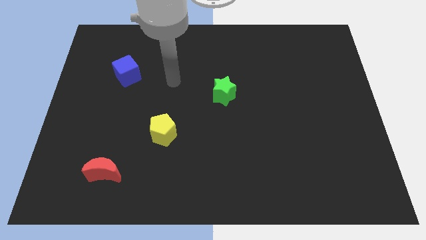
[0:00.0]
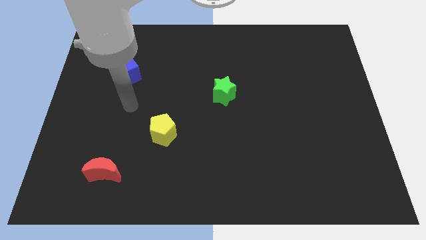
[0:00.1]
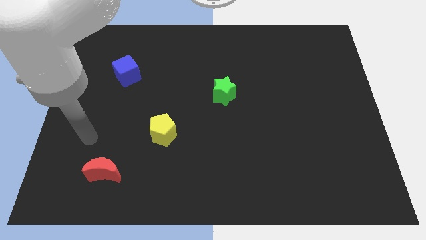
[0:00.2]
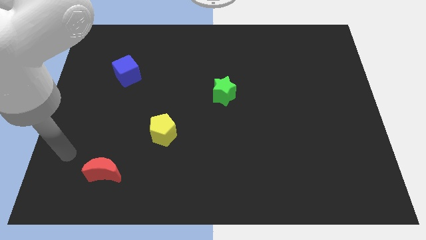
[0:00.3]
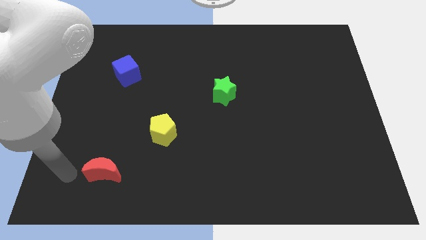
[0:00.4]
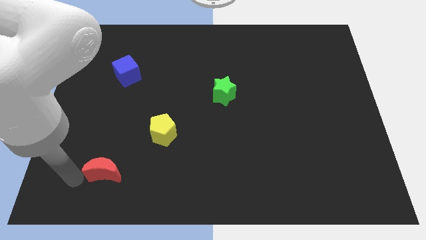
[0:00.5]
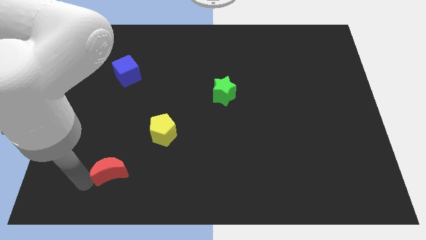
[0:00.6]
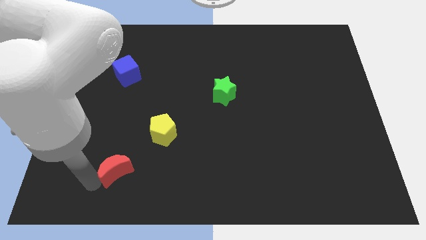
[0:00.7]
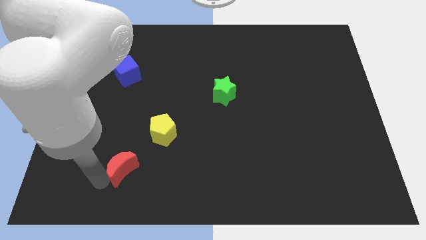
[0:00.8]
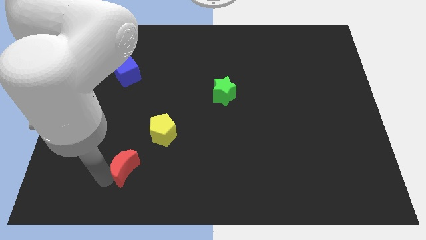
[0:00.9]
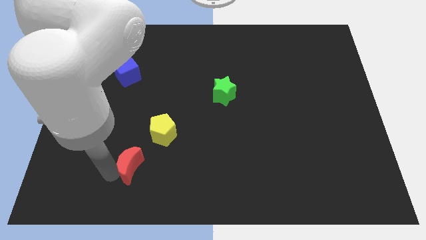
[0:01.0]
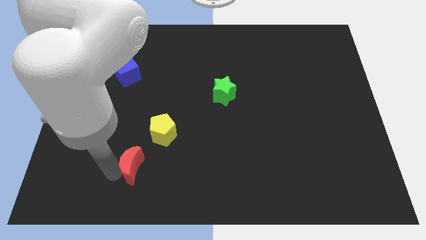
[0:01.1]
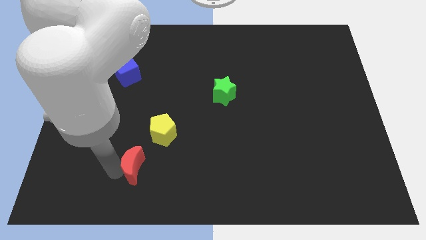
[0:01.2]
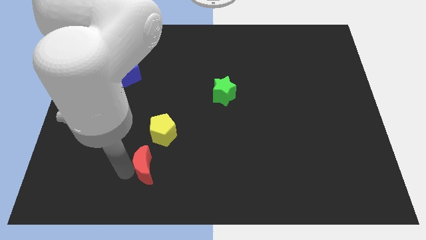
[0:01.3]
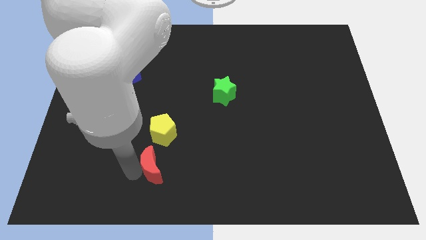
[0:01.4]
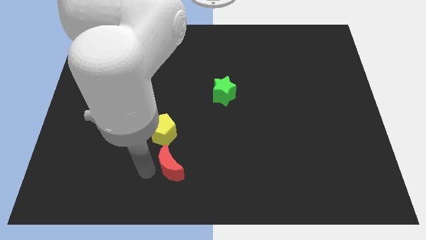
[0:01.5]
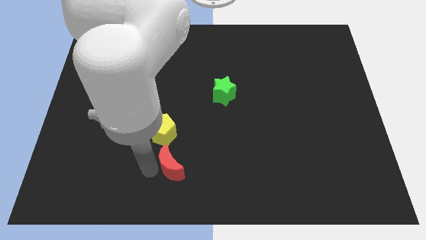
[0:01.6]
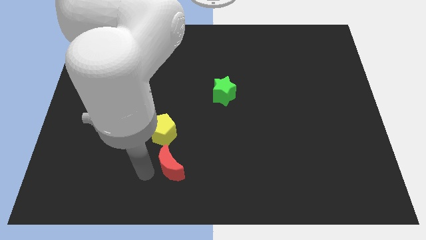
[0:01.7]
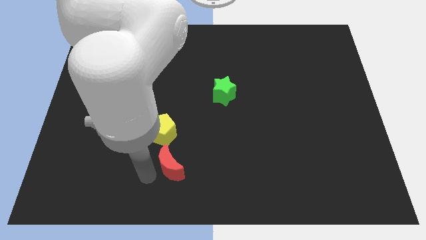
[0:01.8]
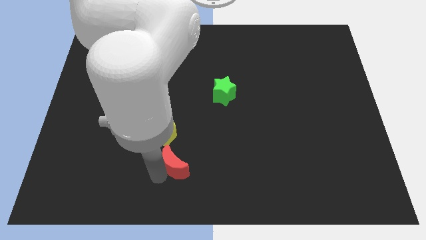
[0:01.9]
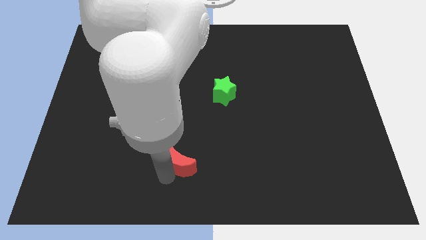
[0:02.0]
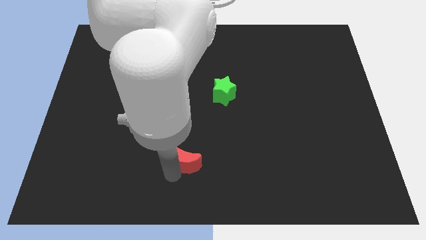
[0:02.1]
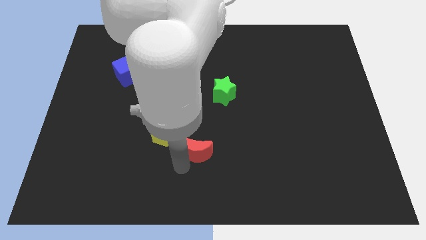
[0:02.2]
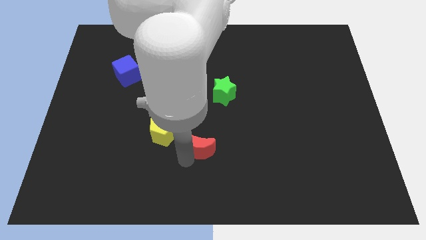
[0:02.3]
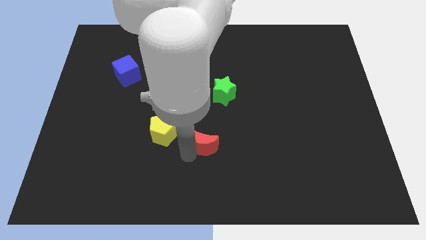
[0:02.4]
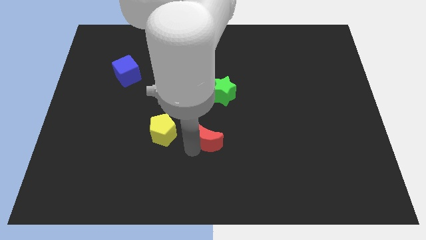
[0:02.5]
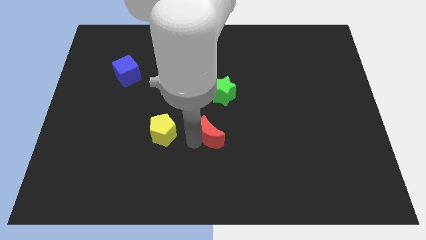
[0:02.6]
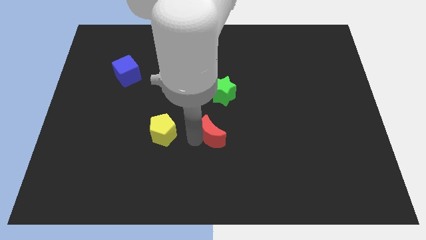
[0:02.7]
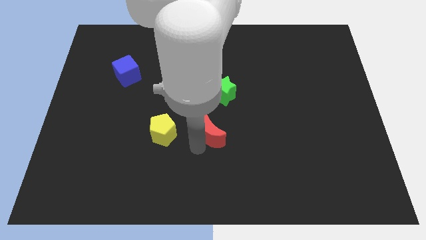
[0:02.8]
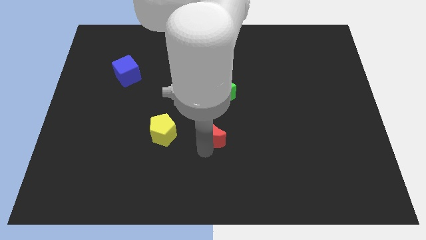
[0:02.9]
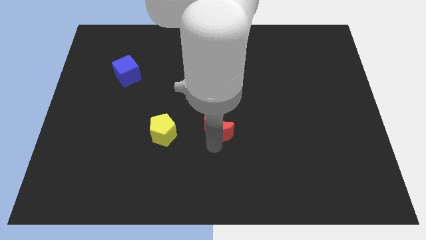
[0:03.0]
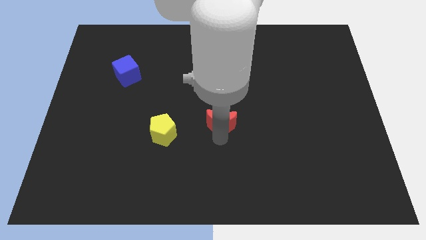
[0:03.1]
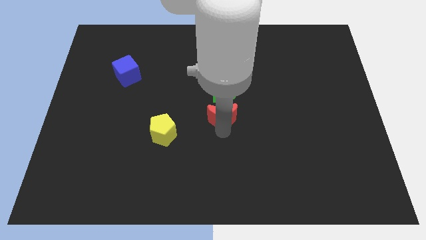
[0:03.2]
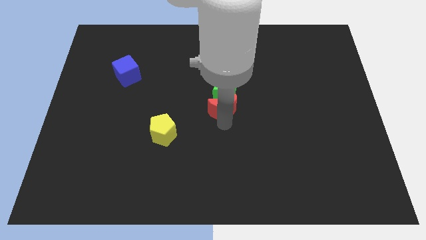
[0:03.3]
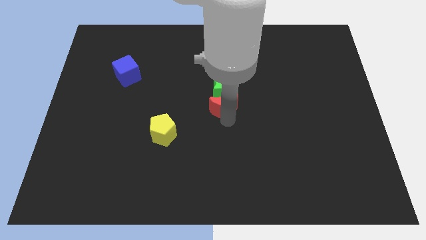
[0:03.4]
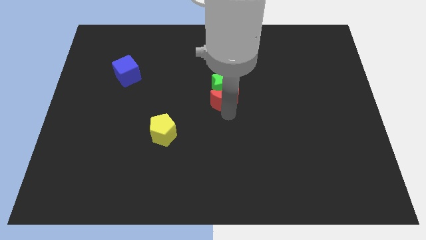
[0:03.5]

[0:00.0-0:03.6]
put the red moon next to the star

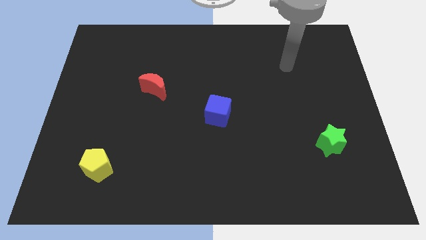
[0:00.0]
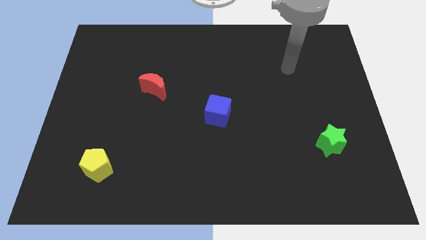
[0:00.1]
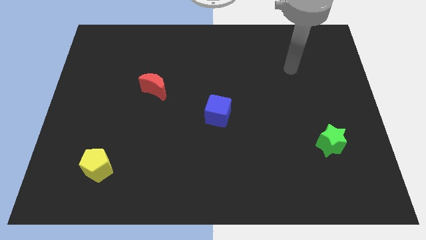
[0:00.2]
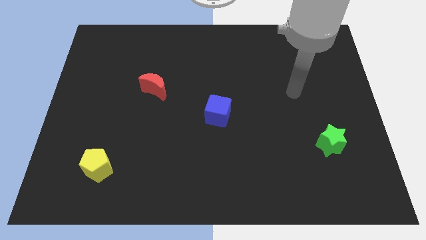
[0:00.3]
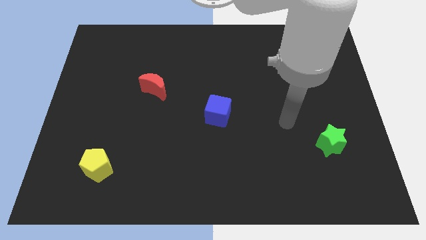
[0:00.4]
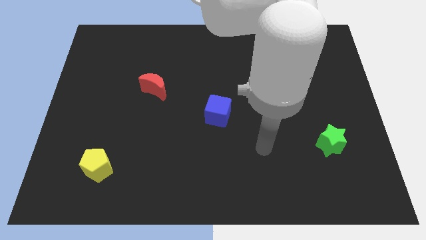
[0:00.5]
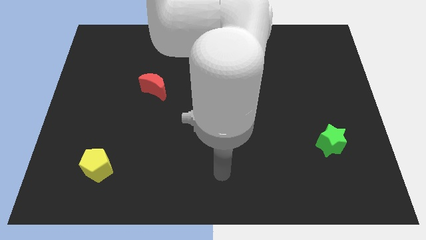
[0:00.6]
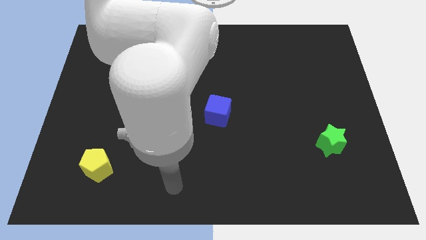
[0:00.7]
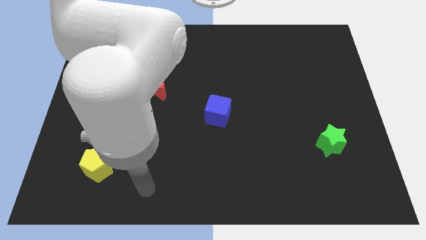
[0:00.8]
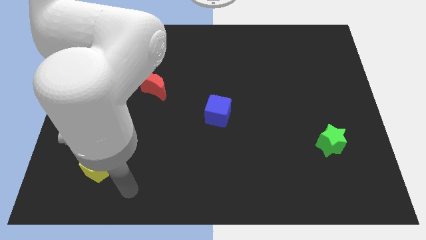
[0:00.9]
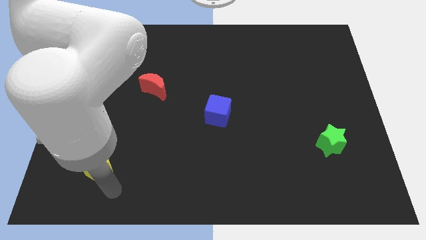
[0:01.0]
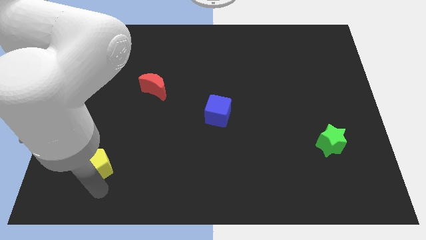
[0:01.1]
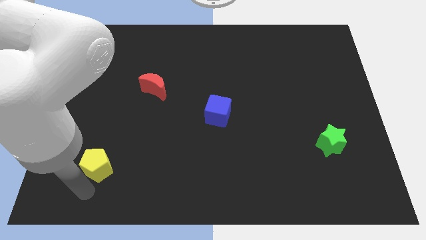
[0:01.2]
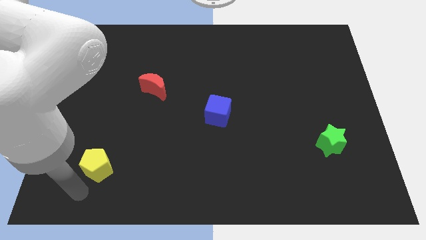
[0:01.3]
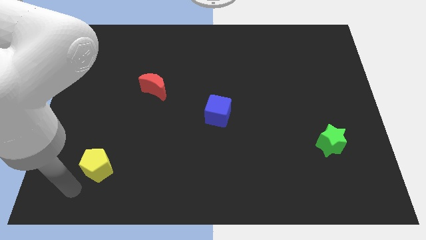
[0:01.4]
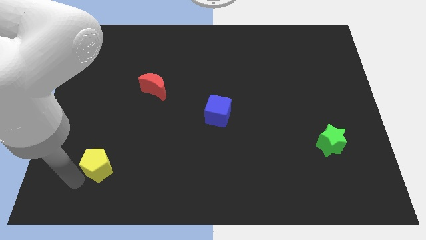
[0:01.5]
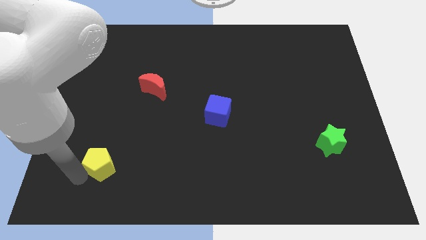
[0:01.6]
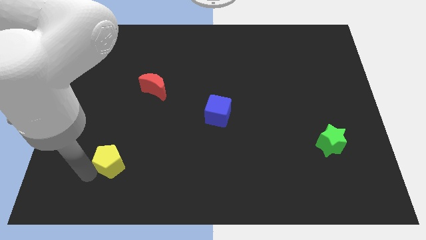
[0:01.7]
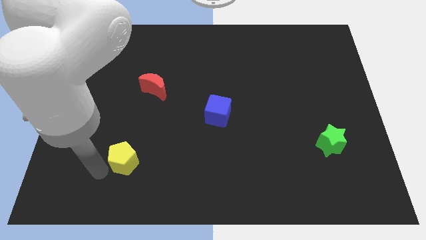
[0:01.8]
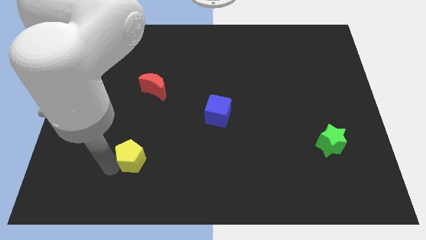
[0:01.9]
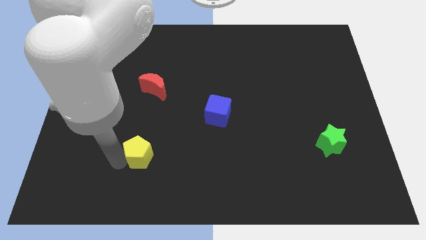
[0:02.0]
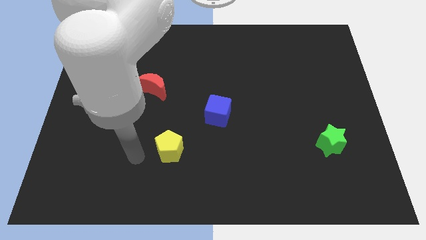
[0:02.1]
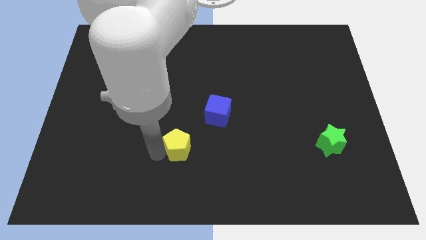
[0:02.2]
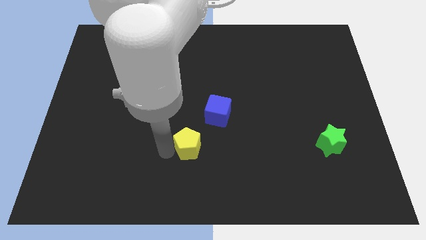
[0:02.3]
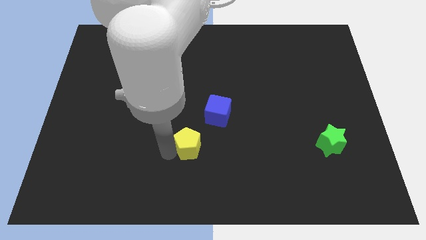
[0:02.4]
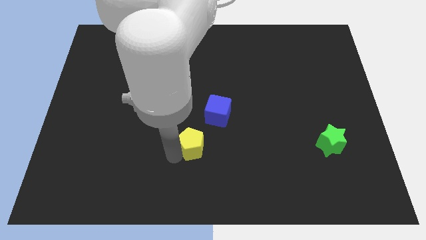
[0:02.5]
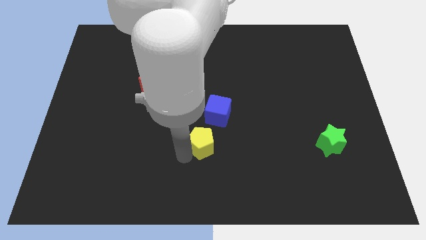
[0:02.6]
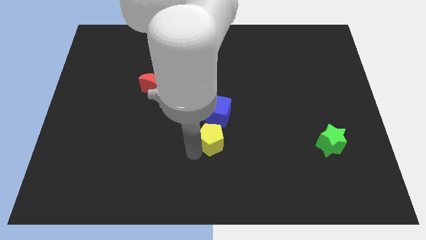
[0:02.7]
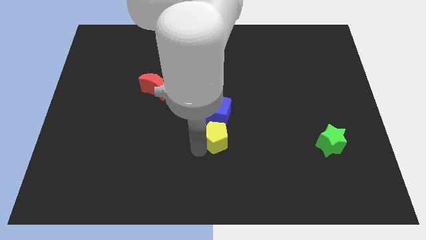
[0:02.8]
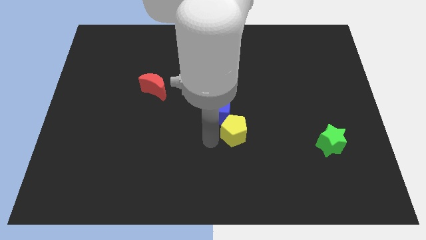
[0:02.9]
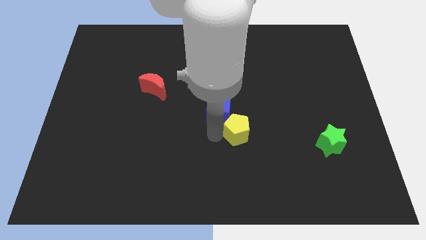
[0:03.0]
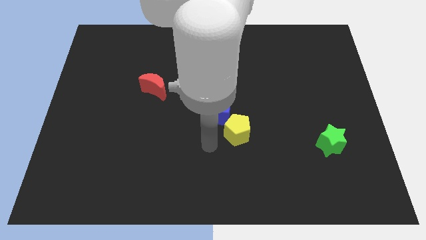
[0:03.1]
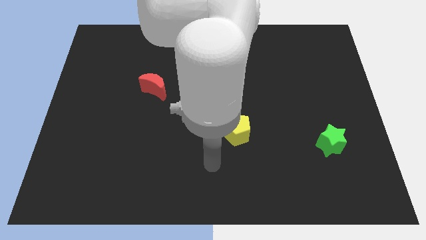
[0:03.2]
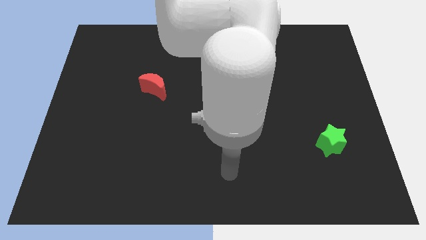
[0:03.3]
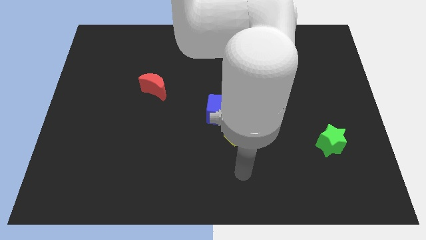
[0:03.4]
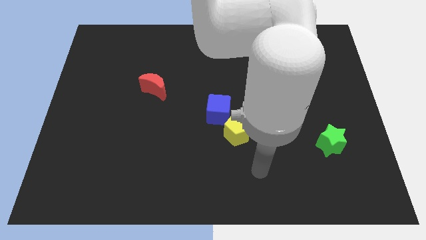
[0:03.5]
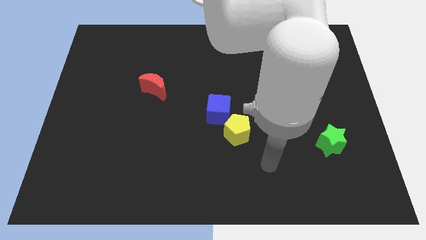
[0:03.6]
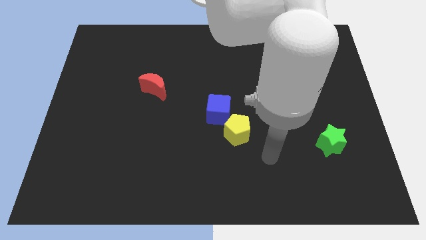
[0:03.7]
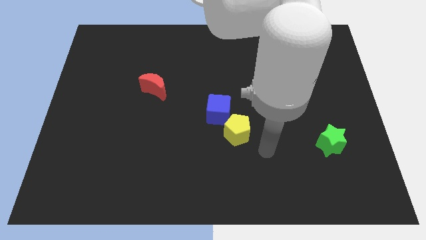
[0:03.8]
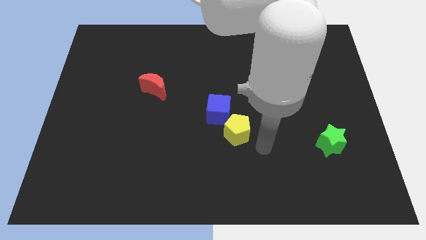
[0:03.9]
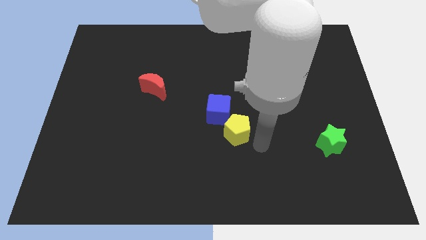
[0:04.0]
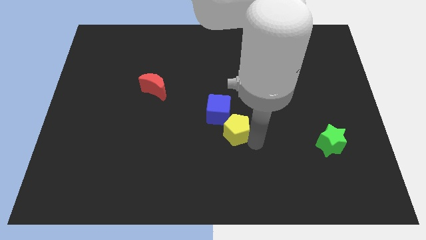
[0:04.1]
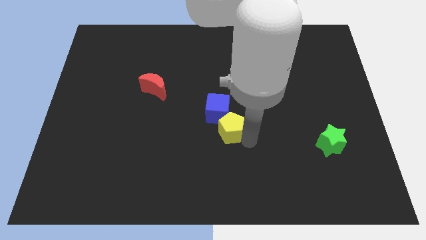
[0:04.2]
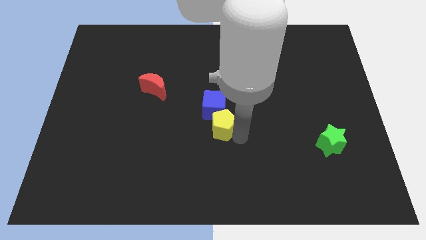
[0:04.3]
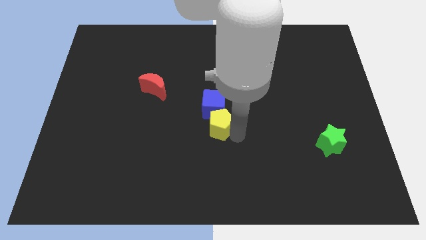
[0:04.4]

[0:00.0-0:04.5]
slide the yellow block next to the blue cube

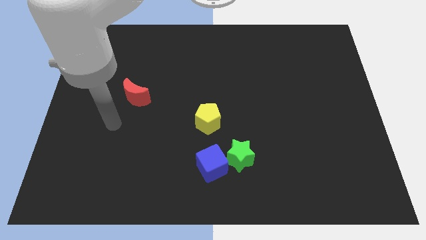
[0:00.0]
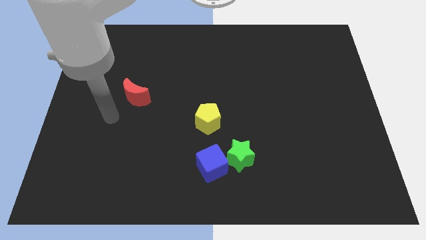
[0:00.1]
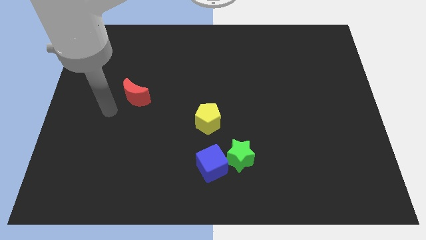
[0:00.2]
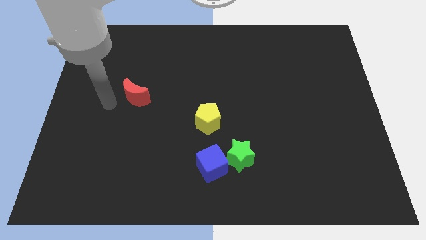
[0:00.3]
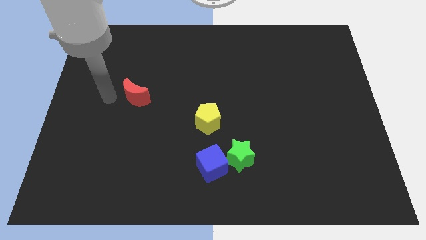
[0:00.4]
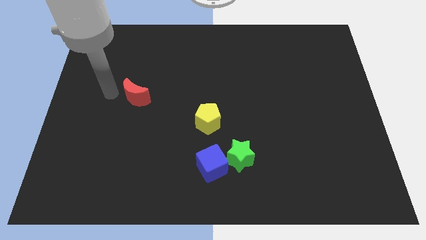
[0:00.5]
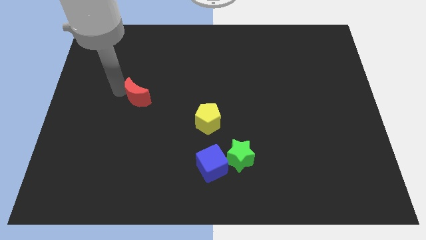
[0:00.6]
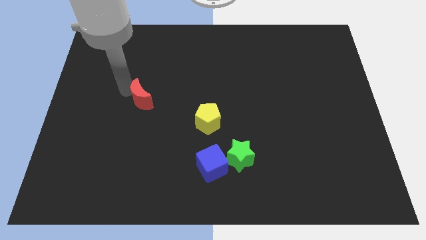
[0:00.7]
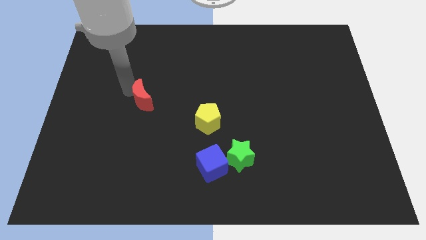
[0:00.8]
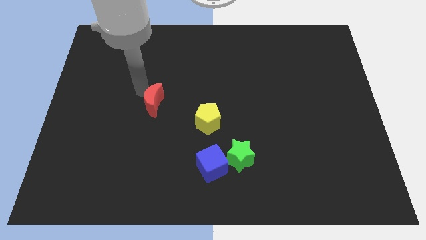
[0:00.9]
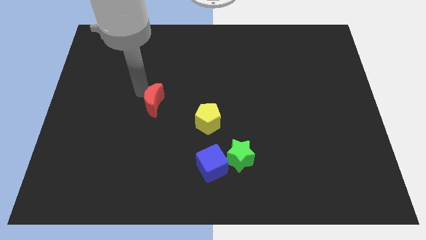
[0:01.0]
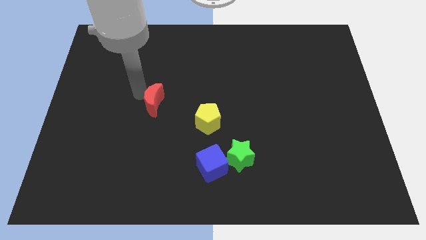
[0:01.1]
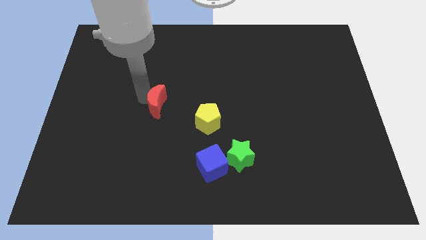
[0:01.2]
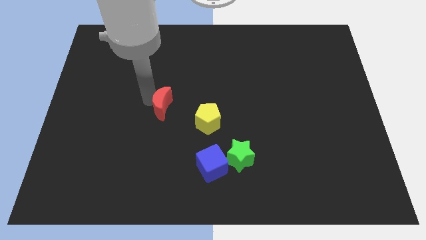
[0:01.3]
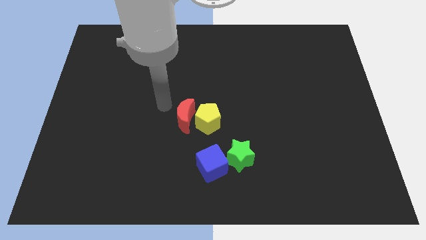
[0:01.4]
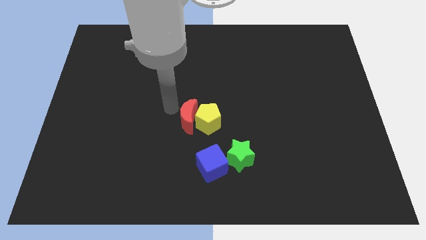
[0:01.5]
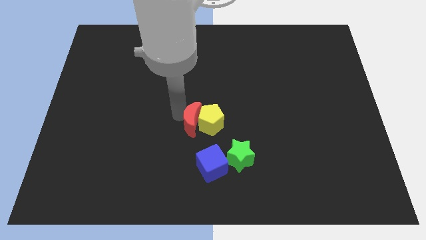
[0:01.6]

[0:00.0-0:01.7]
slide the red block close to the pentagon
